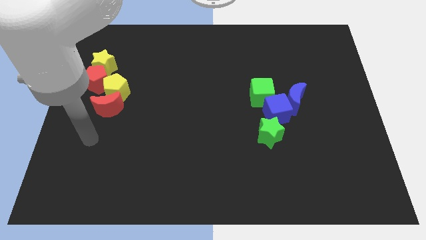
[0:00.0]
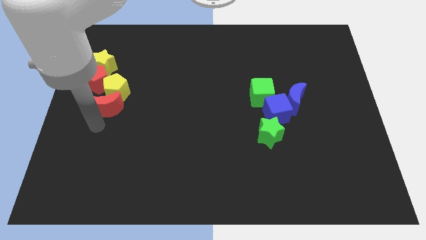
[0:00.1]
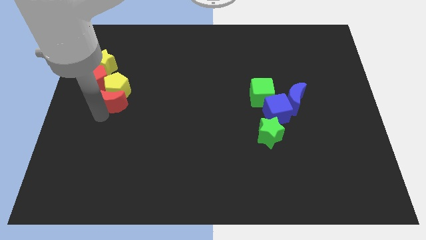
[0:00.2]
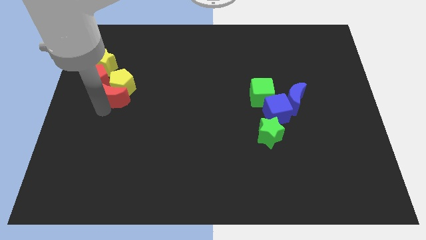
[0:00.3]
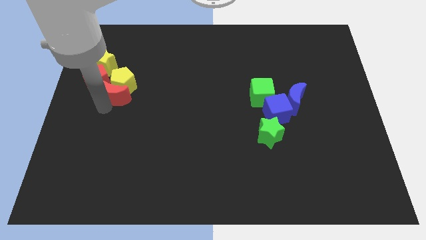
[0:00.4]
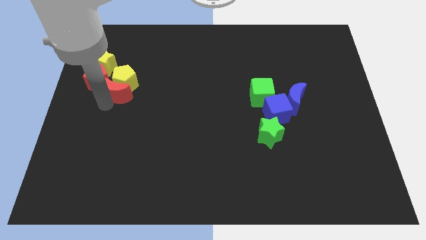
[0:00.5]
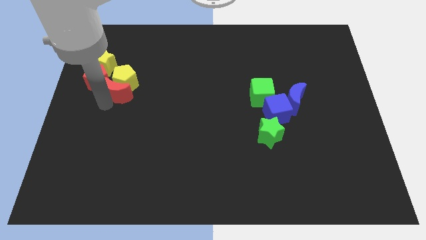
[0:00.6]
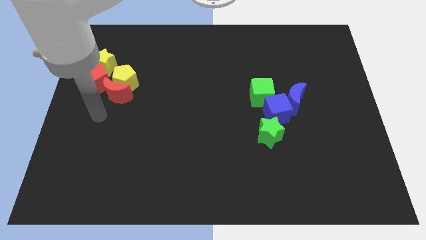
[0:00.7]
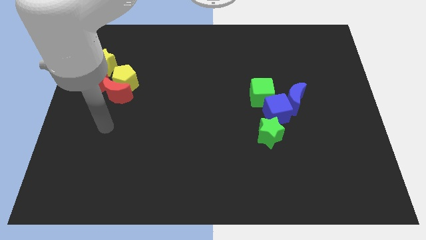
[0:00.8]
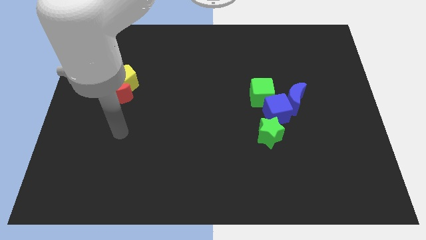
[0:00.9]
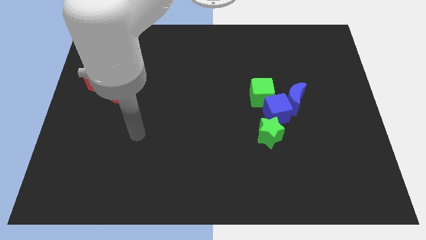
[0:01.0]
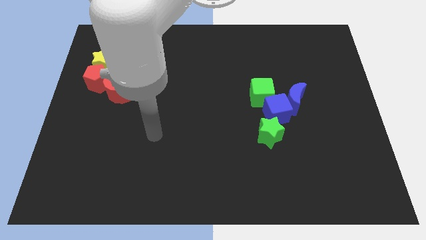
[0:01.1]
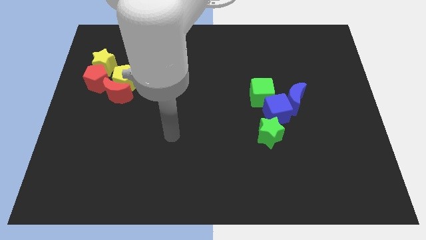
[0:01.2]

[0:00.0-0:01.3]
push yellow pentagon with the red moon

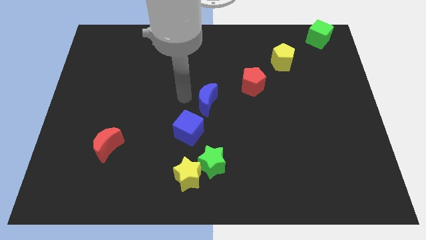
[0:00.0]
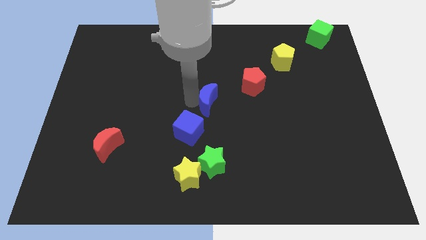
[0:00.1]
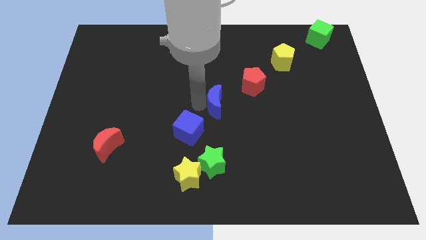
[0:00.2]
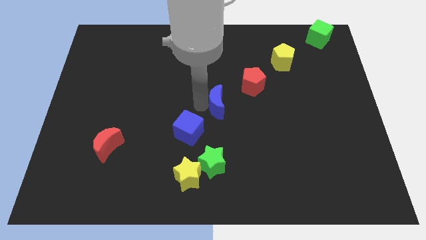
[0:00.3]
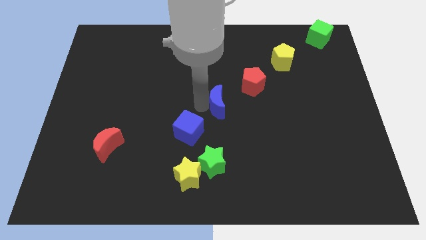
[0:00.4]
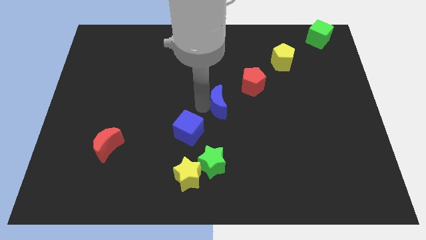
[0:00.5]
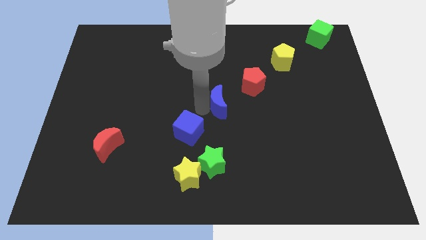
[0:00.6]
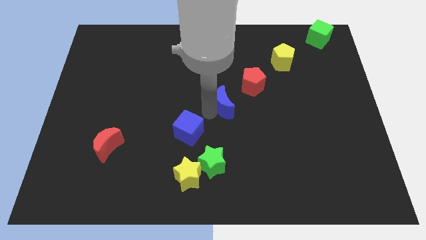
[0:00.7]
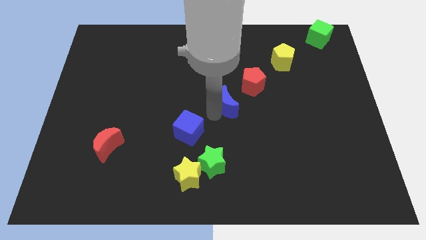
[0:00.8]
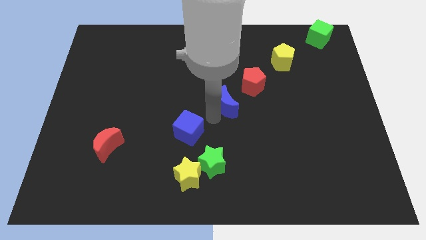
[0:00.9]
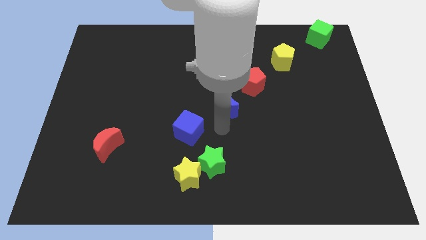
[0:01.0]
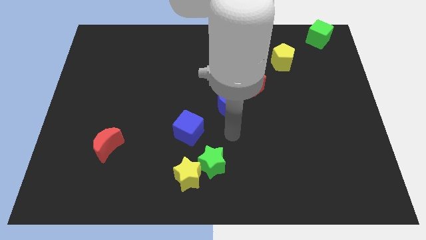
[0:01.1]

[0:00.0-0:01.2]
separate blue crescent and blue cube

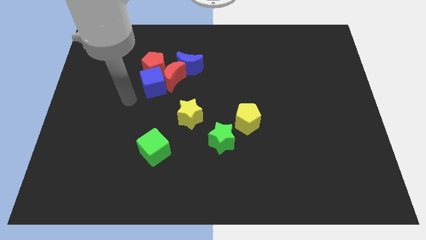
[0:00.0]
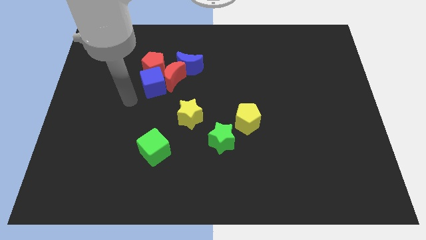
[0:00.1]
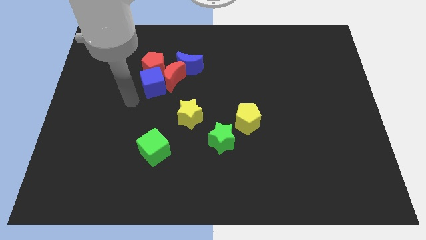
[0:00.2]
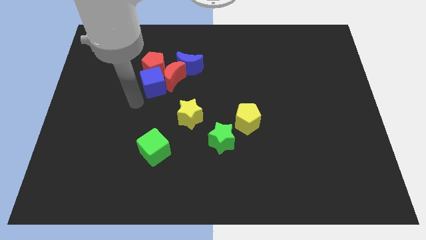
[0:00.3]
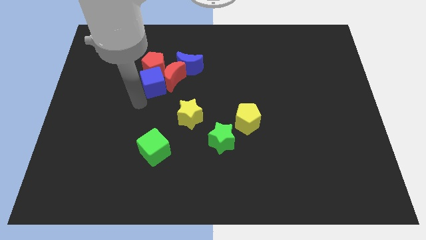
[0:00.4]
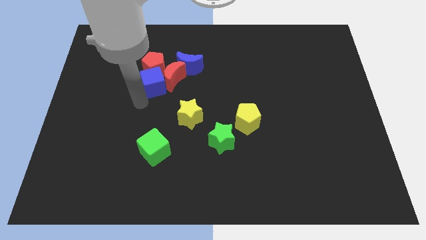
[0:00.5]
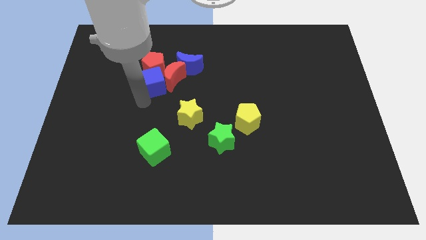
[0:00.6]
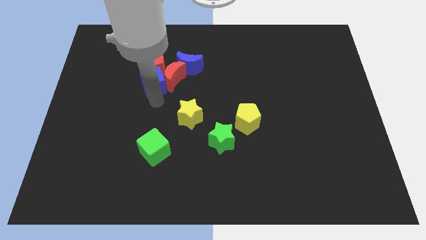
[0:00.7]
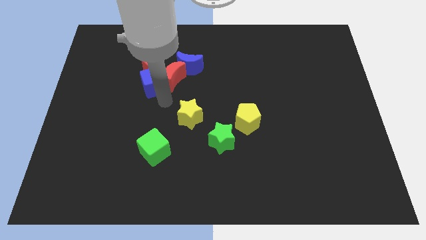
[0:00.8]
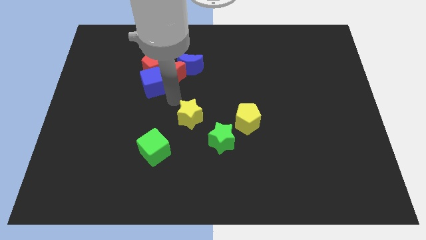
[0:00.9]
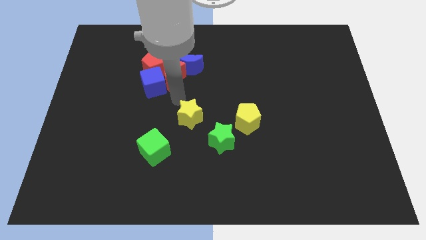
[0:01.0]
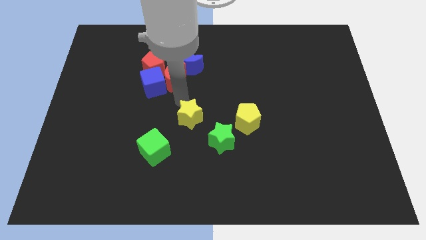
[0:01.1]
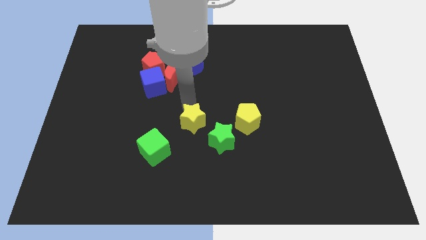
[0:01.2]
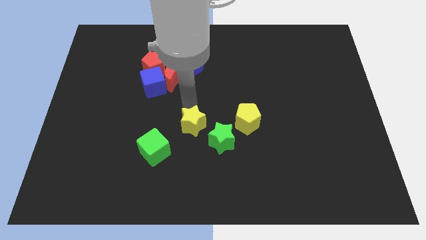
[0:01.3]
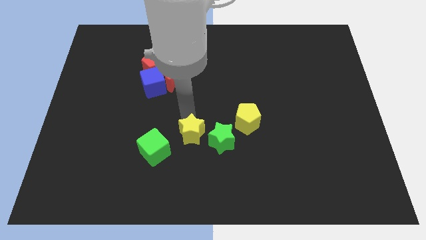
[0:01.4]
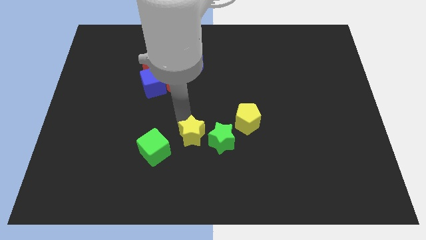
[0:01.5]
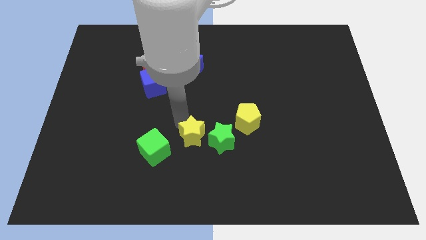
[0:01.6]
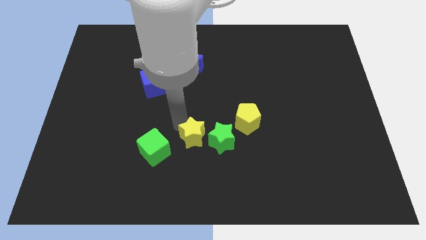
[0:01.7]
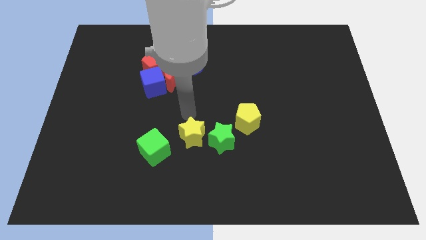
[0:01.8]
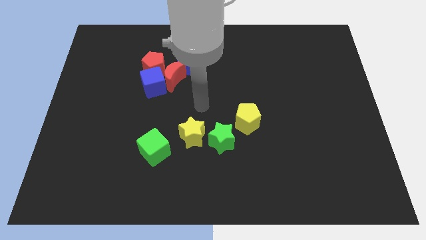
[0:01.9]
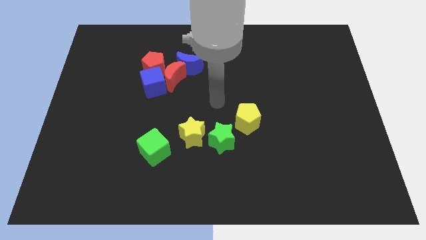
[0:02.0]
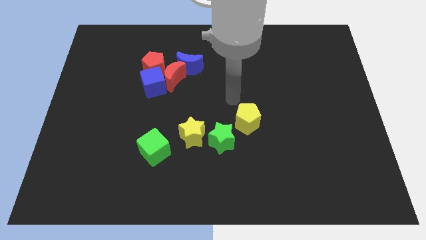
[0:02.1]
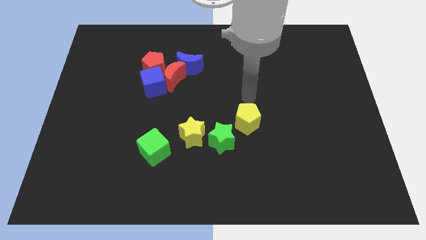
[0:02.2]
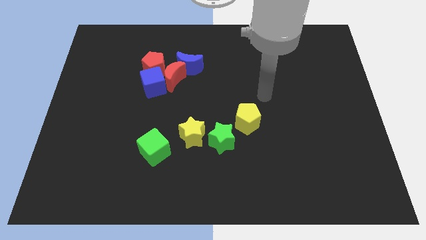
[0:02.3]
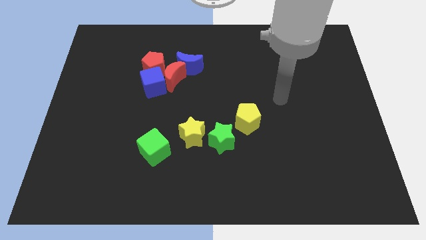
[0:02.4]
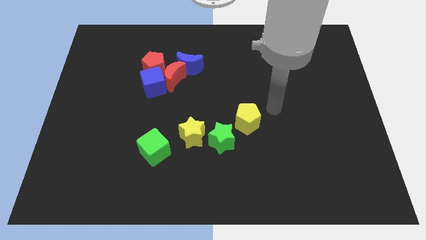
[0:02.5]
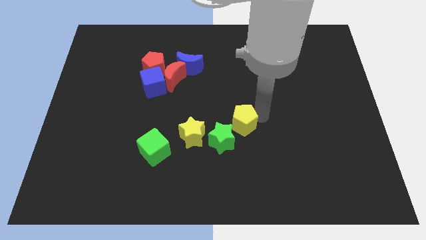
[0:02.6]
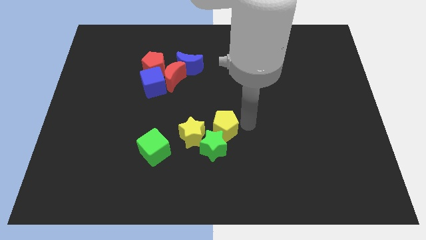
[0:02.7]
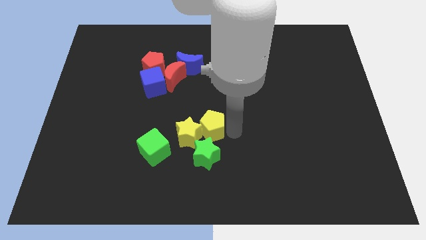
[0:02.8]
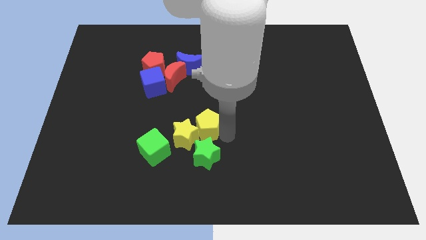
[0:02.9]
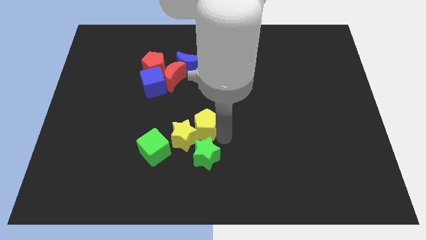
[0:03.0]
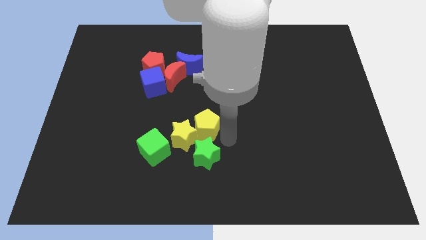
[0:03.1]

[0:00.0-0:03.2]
move the yellow pentagon into the yellow star

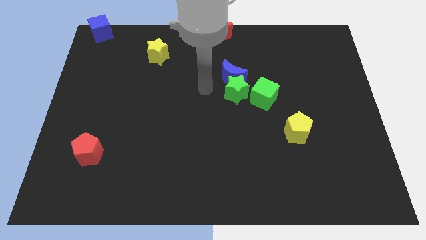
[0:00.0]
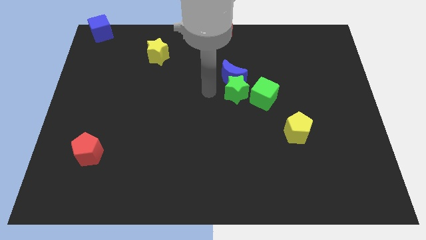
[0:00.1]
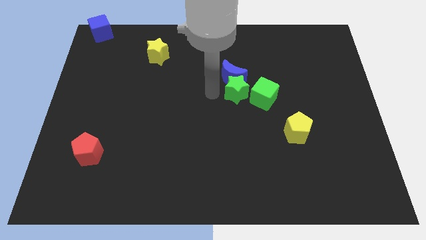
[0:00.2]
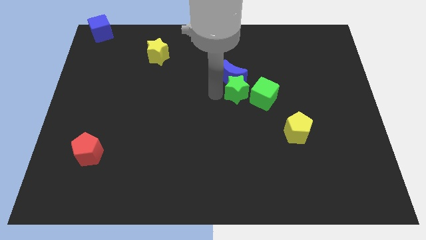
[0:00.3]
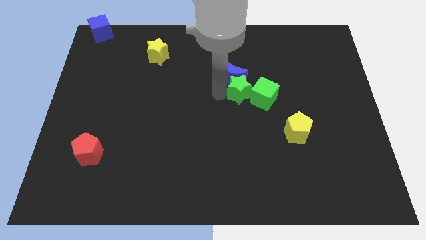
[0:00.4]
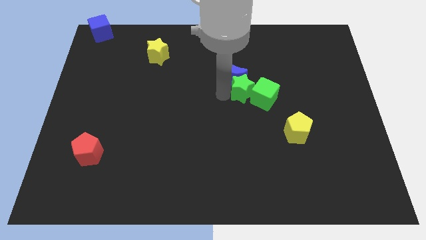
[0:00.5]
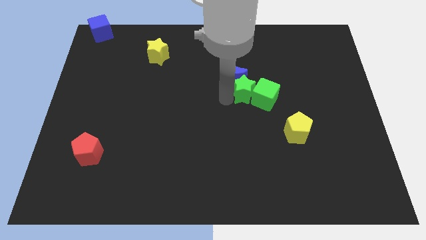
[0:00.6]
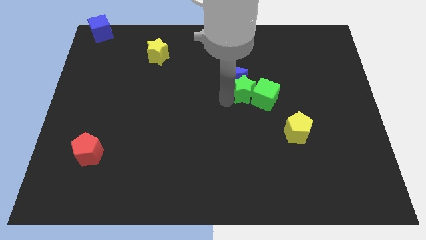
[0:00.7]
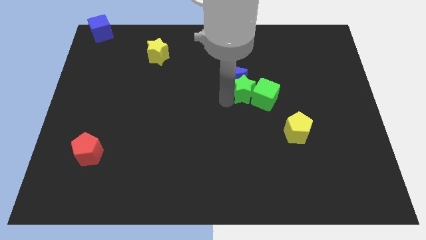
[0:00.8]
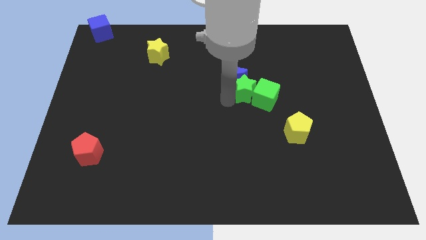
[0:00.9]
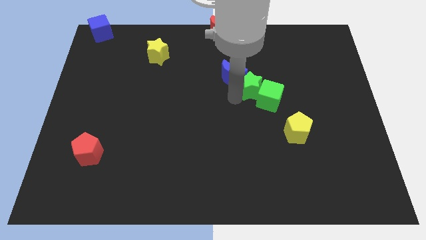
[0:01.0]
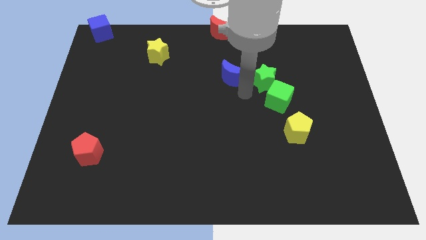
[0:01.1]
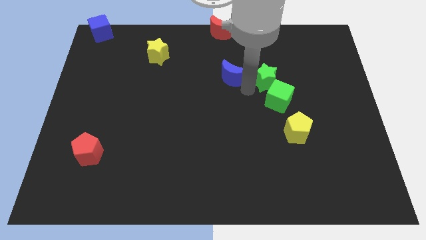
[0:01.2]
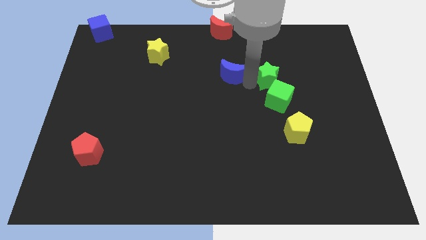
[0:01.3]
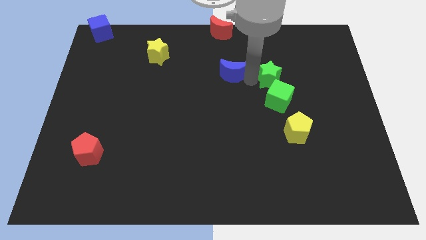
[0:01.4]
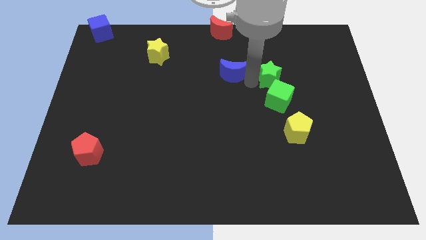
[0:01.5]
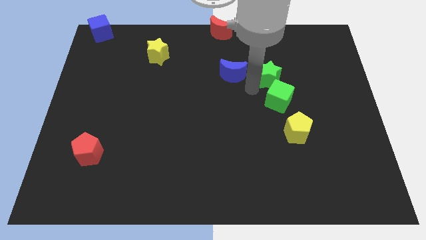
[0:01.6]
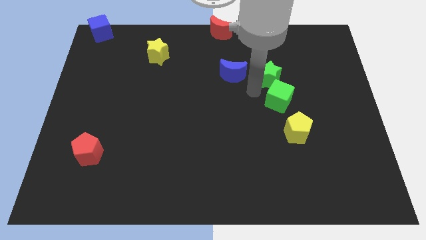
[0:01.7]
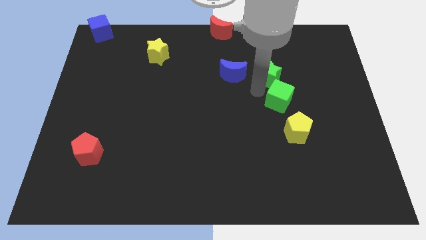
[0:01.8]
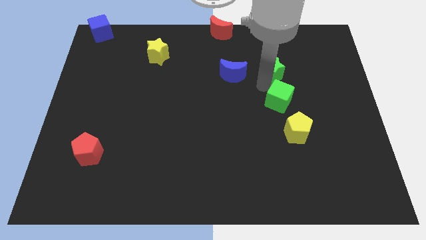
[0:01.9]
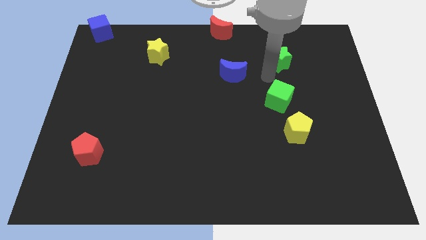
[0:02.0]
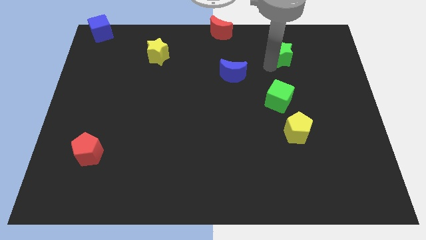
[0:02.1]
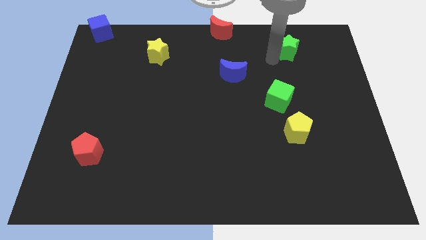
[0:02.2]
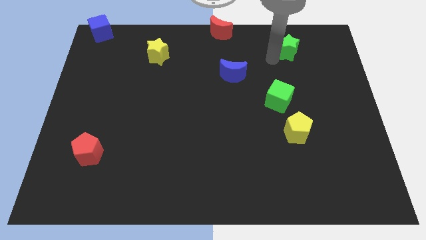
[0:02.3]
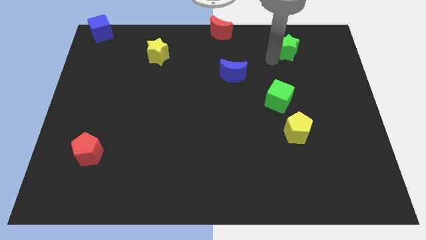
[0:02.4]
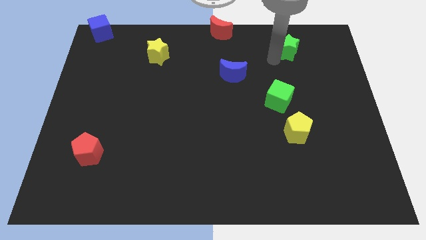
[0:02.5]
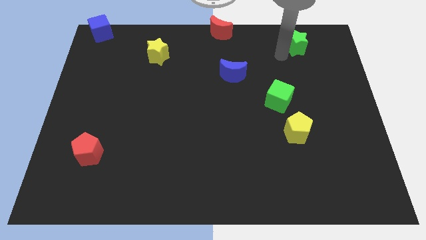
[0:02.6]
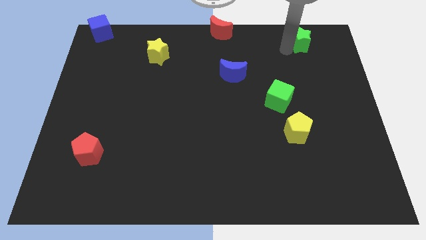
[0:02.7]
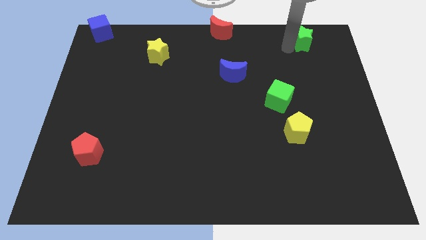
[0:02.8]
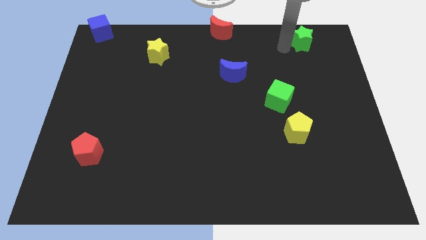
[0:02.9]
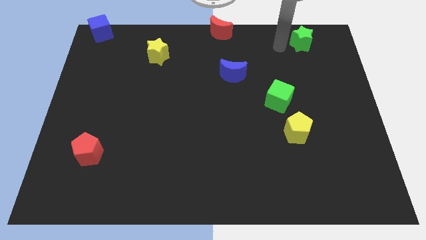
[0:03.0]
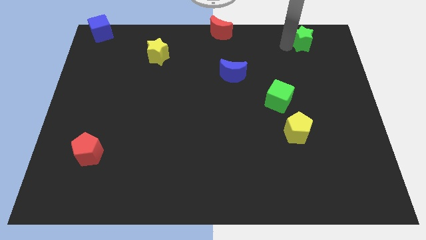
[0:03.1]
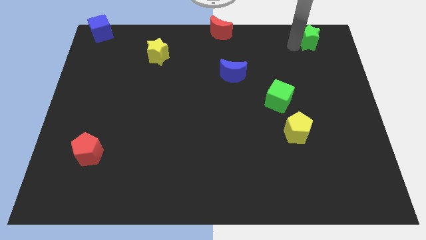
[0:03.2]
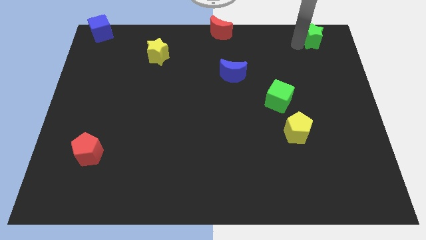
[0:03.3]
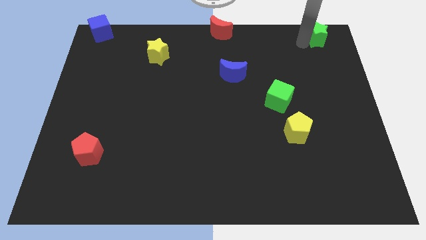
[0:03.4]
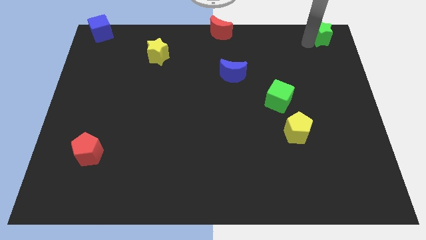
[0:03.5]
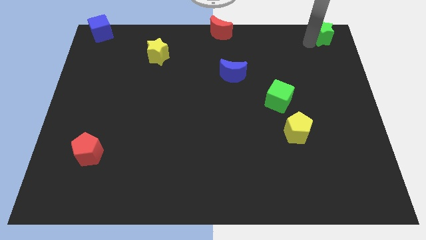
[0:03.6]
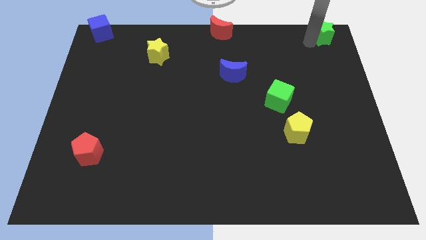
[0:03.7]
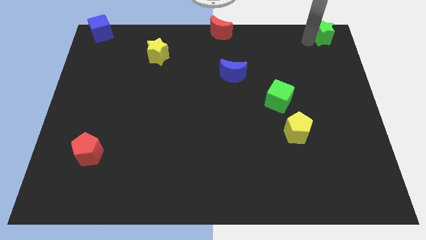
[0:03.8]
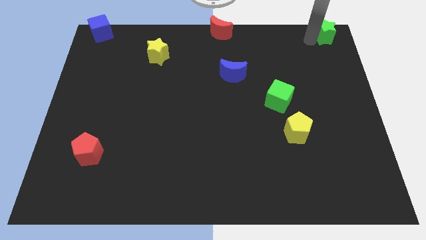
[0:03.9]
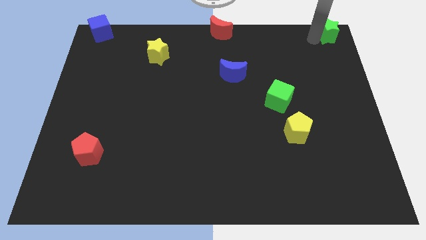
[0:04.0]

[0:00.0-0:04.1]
place the green star to the top right corner of the board
